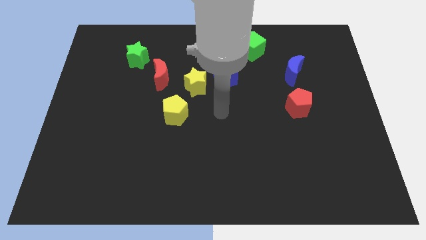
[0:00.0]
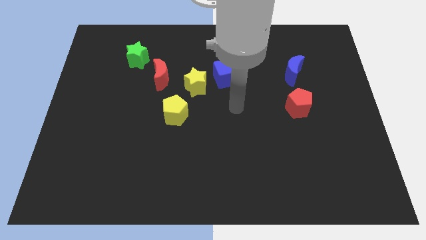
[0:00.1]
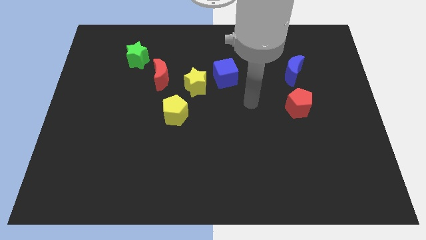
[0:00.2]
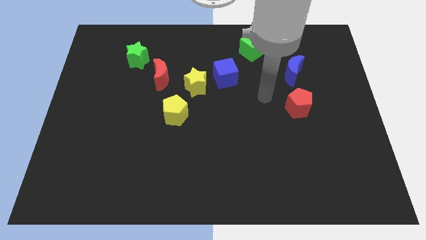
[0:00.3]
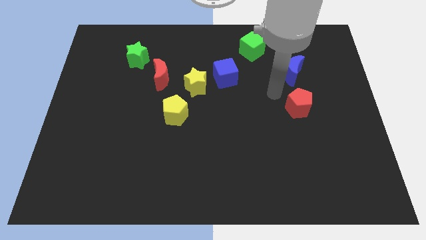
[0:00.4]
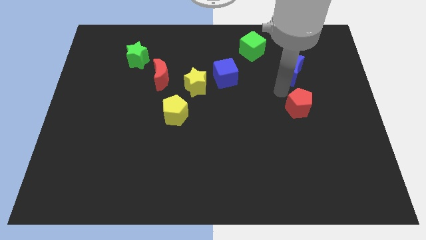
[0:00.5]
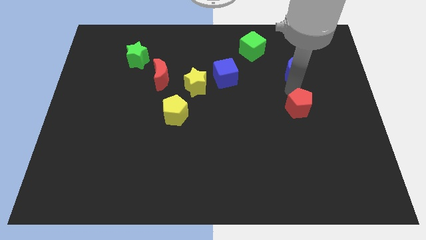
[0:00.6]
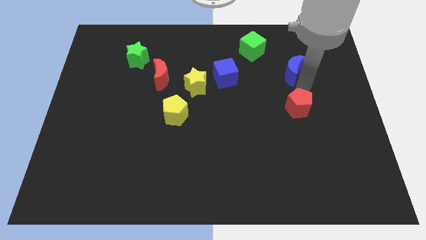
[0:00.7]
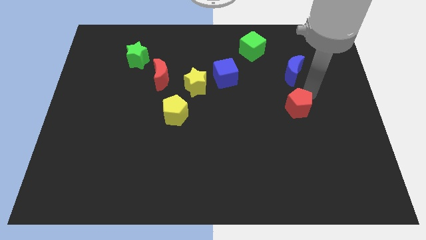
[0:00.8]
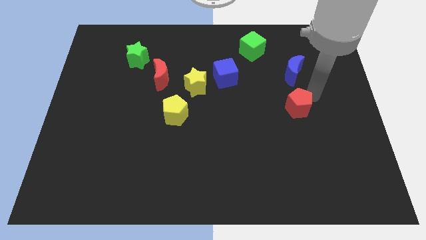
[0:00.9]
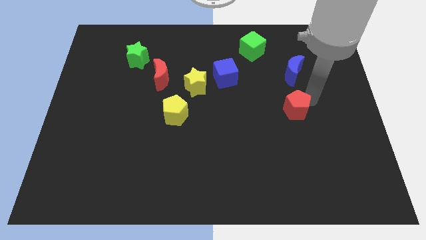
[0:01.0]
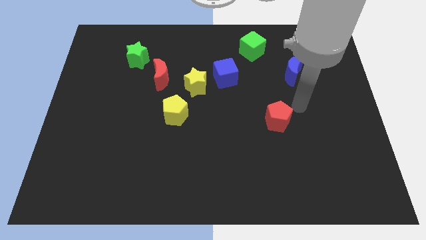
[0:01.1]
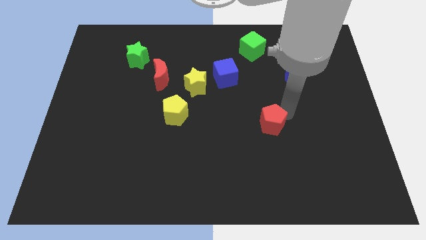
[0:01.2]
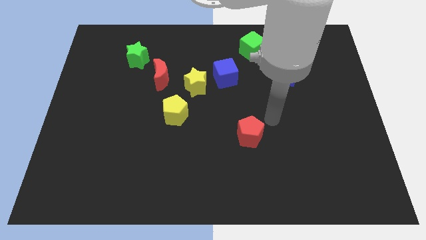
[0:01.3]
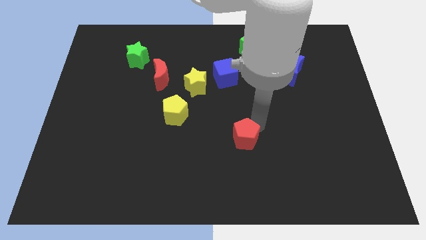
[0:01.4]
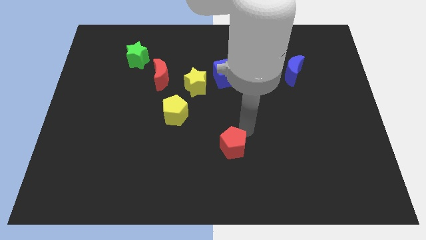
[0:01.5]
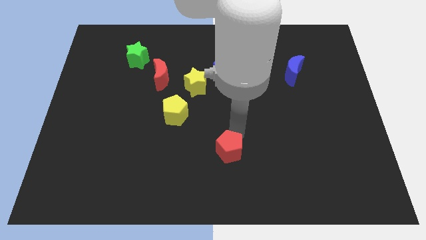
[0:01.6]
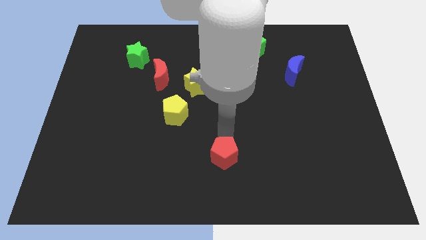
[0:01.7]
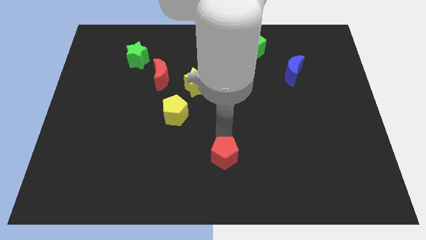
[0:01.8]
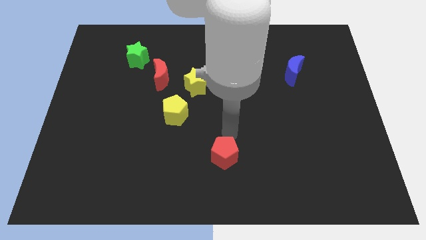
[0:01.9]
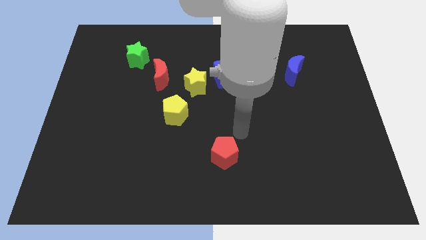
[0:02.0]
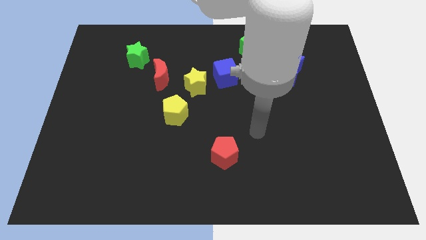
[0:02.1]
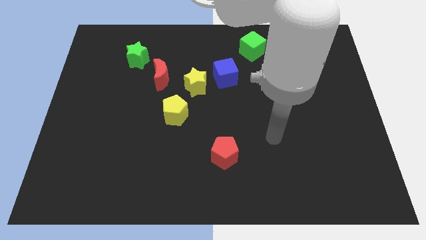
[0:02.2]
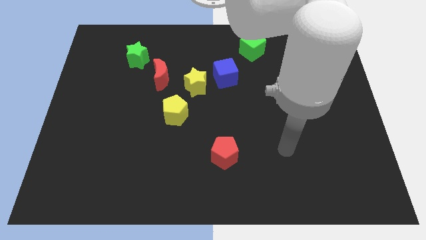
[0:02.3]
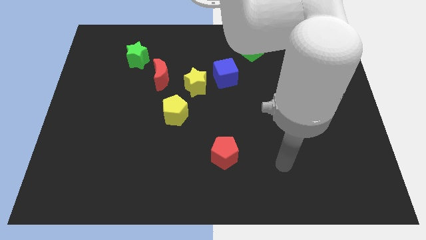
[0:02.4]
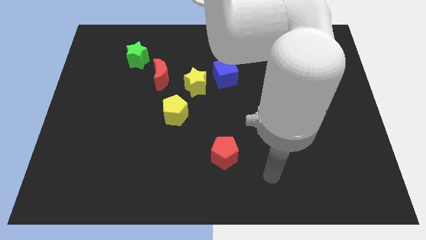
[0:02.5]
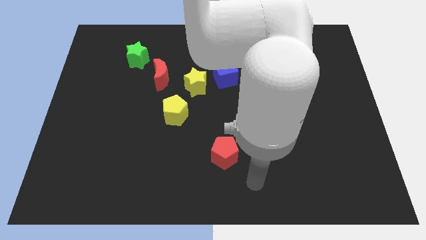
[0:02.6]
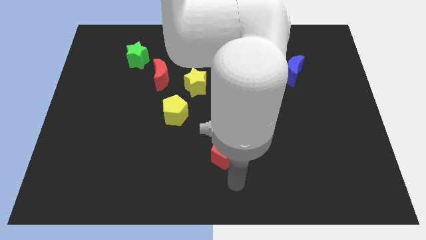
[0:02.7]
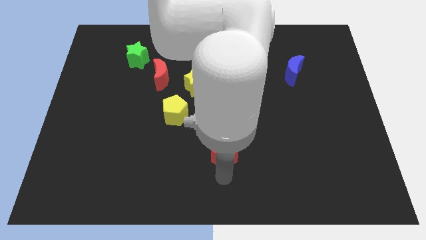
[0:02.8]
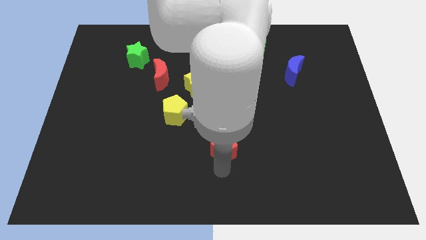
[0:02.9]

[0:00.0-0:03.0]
slide the red pentagon to the bottom center

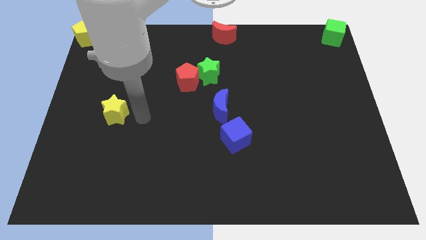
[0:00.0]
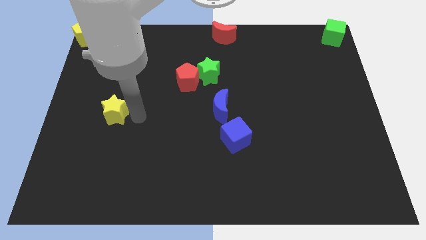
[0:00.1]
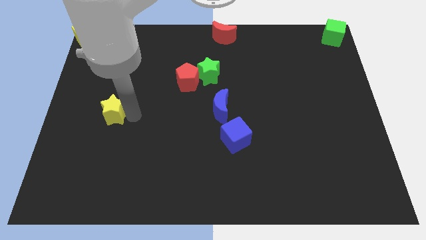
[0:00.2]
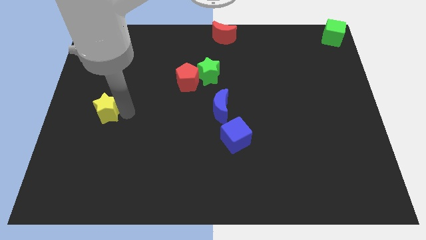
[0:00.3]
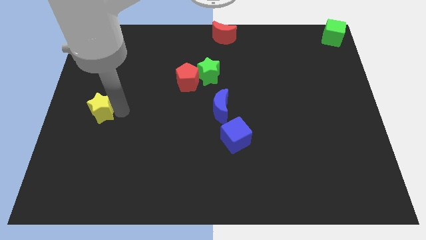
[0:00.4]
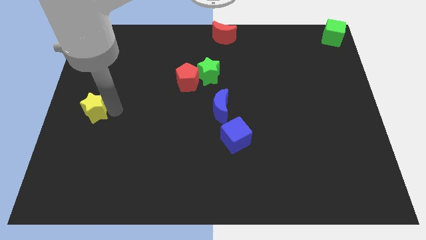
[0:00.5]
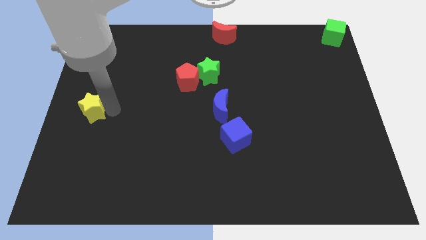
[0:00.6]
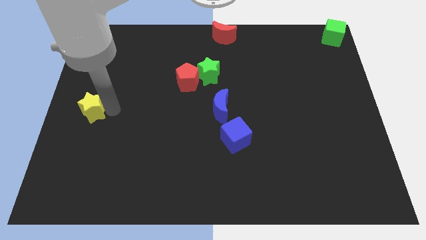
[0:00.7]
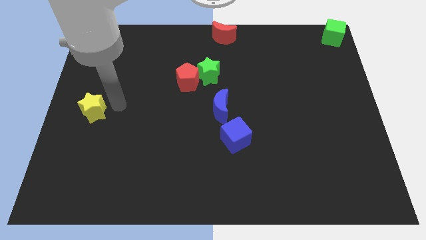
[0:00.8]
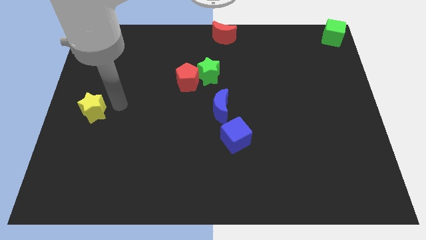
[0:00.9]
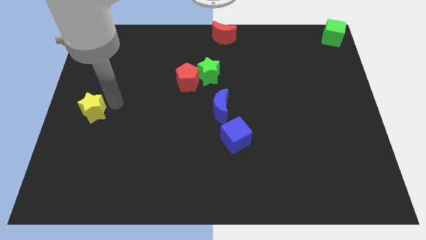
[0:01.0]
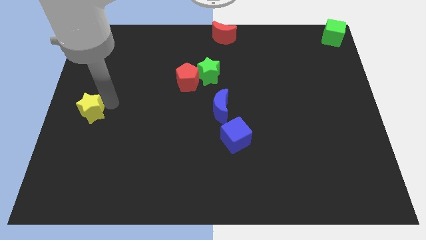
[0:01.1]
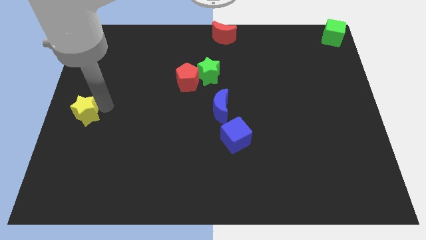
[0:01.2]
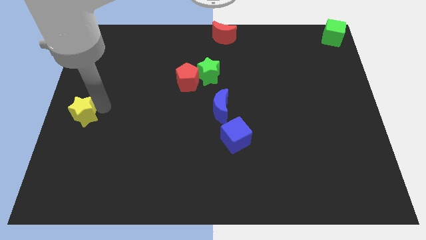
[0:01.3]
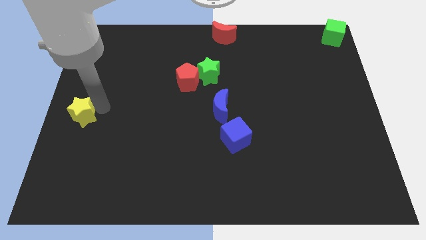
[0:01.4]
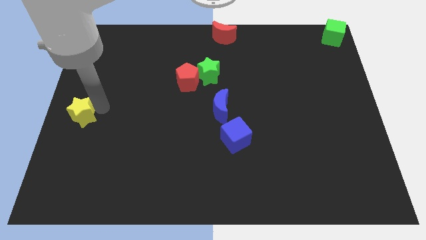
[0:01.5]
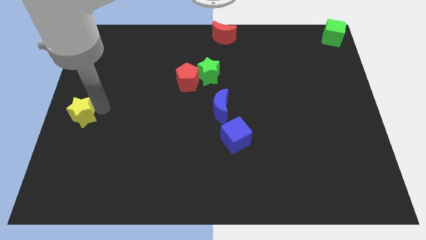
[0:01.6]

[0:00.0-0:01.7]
push the yellow star left center of the board

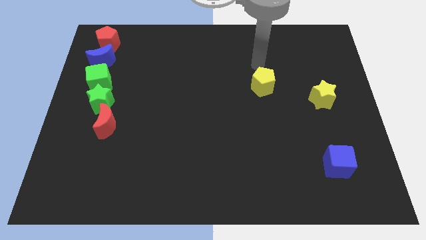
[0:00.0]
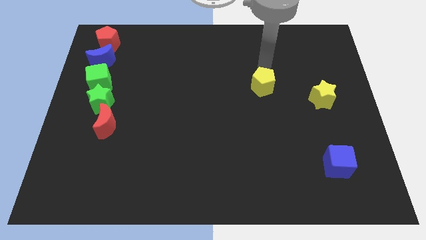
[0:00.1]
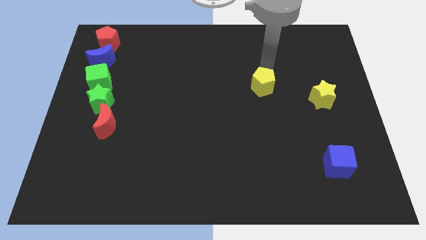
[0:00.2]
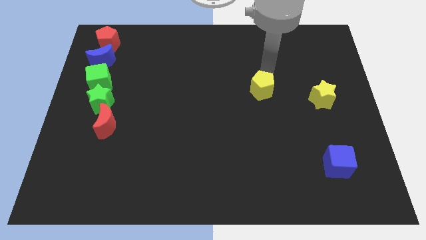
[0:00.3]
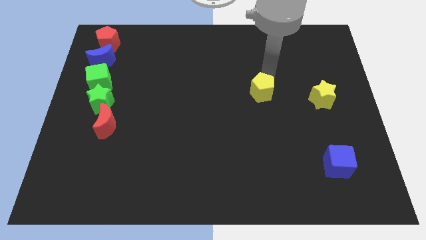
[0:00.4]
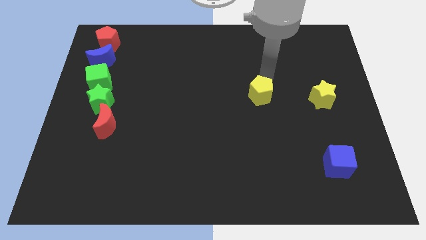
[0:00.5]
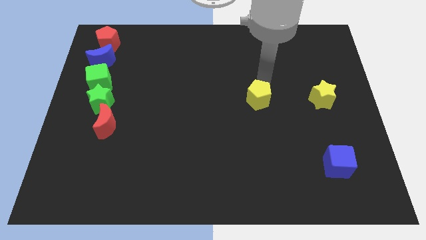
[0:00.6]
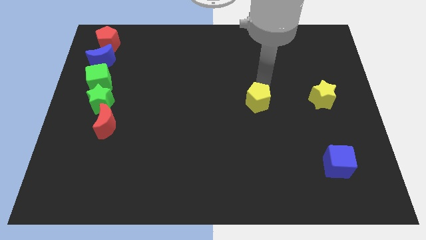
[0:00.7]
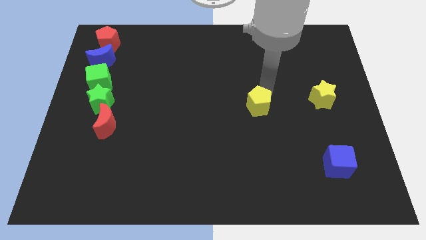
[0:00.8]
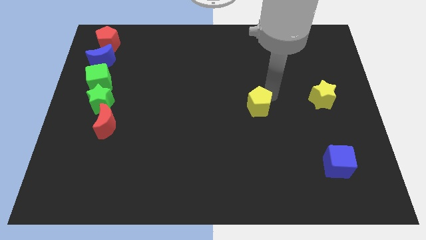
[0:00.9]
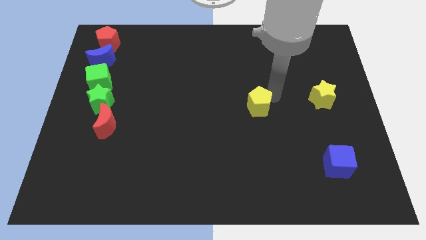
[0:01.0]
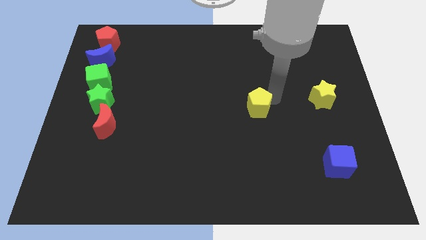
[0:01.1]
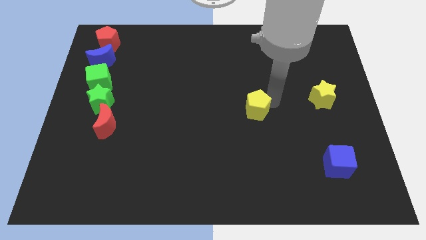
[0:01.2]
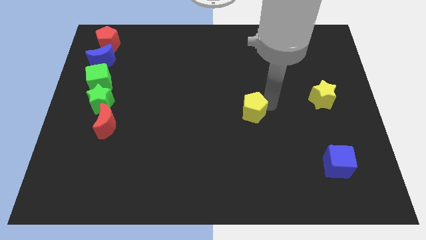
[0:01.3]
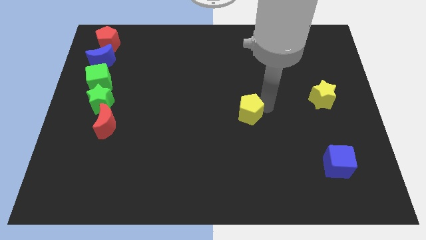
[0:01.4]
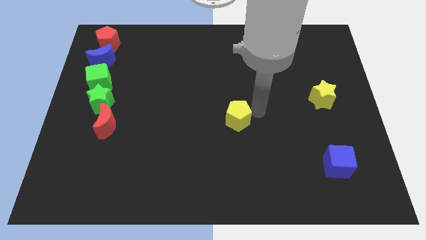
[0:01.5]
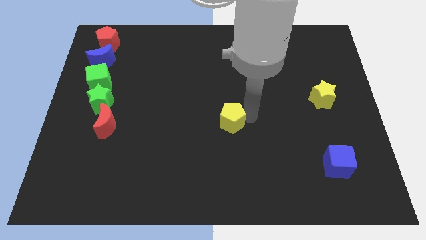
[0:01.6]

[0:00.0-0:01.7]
push the yellow pentagon towards the center of the board

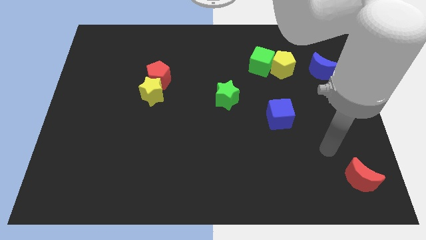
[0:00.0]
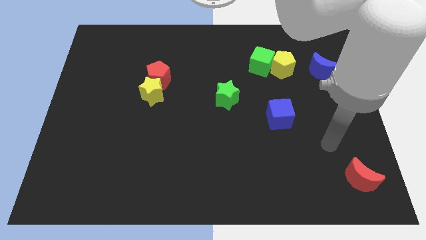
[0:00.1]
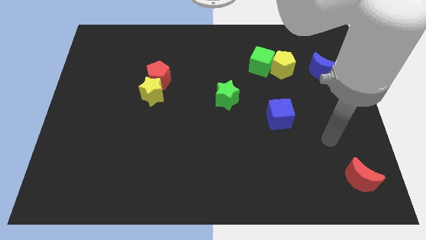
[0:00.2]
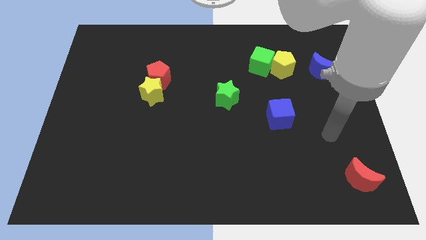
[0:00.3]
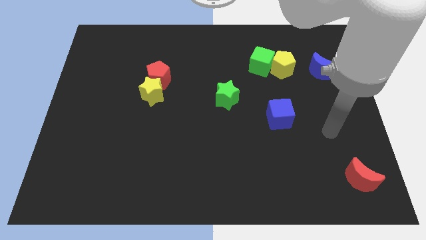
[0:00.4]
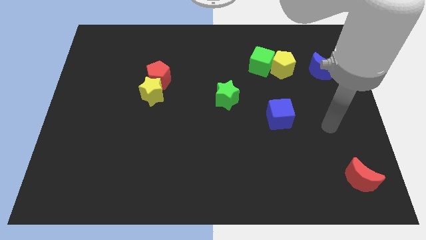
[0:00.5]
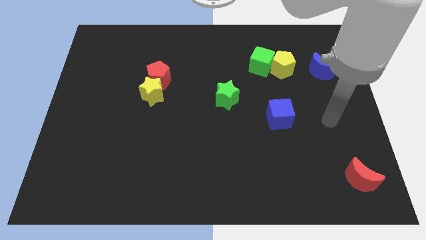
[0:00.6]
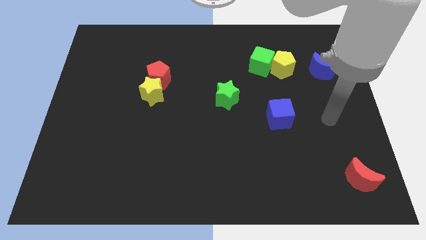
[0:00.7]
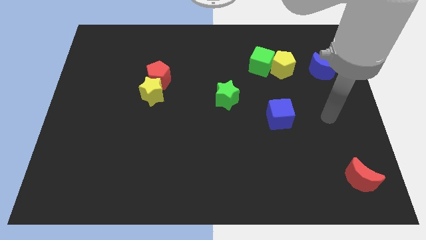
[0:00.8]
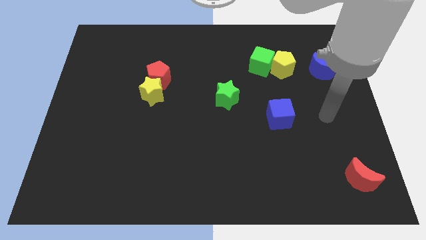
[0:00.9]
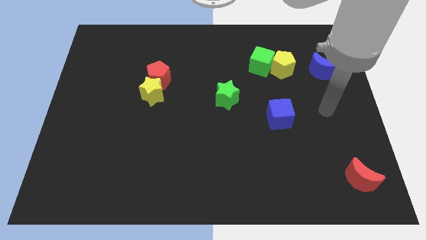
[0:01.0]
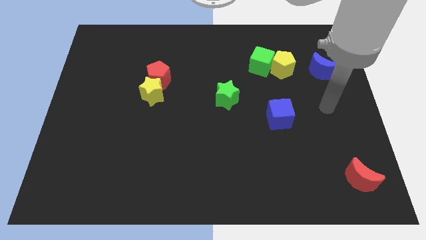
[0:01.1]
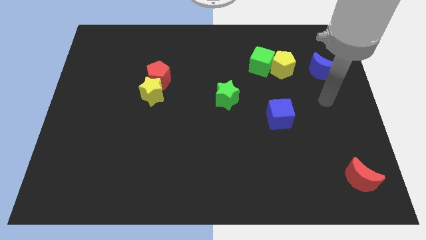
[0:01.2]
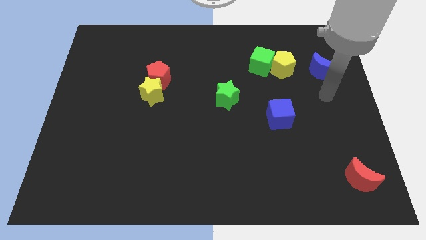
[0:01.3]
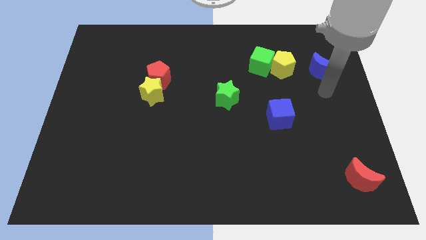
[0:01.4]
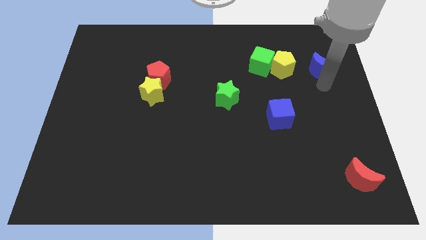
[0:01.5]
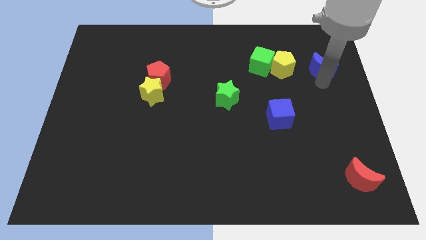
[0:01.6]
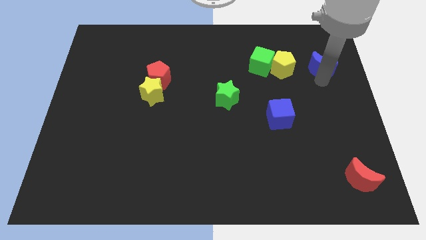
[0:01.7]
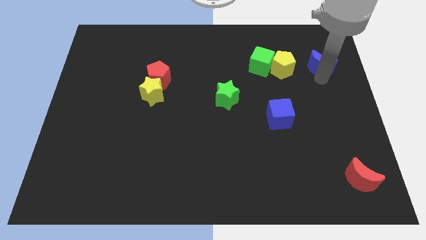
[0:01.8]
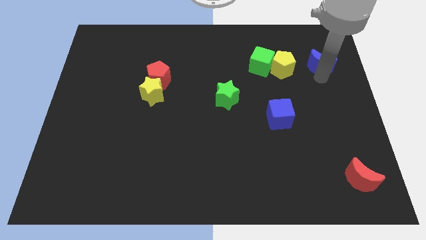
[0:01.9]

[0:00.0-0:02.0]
move your arm below the blue crescent

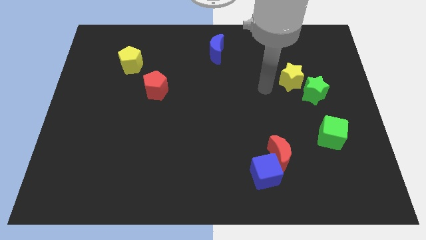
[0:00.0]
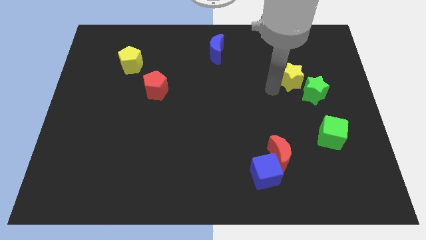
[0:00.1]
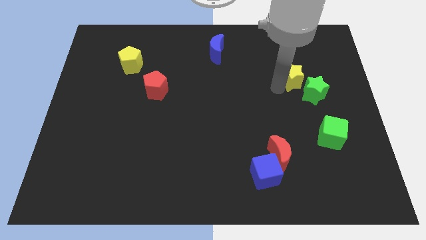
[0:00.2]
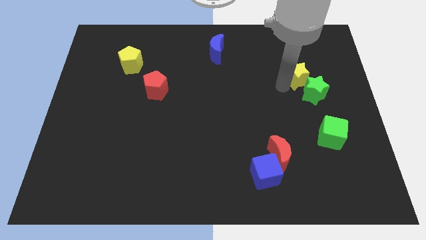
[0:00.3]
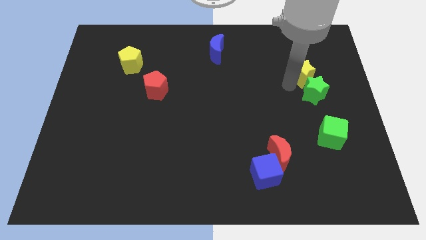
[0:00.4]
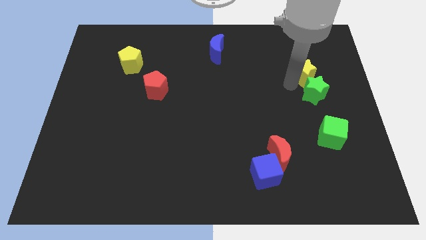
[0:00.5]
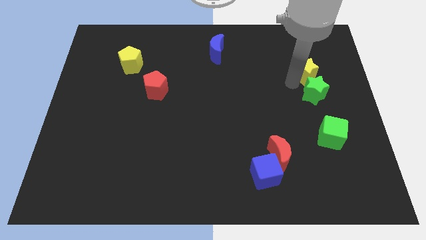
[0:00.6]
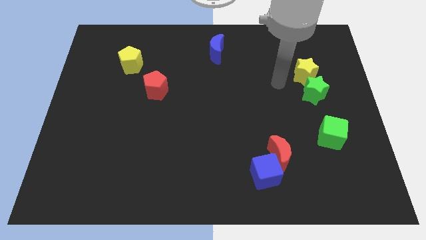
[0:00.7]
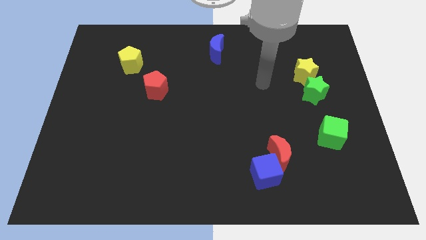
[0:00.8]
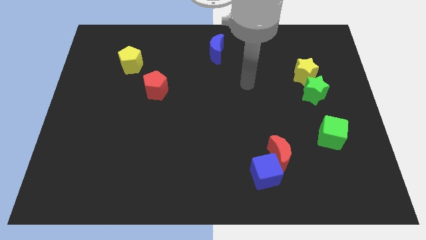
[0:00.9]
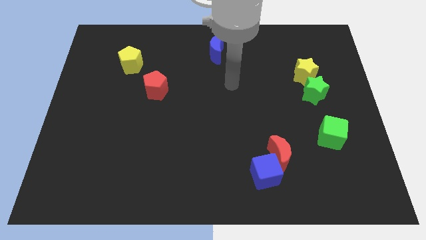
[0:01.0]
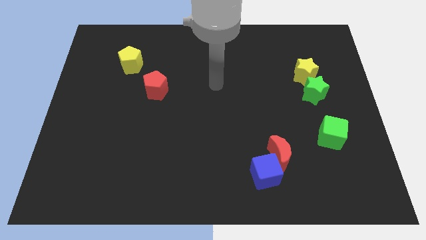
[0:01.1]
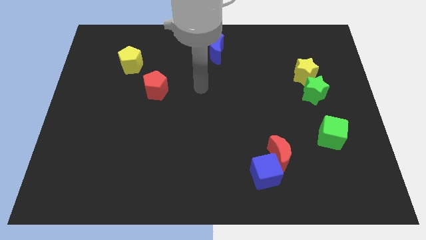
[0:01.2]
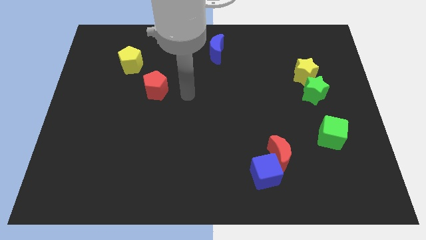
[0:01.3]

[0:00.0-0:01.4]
place yellow star above green star
